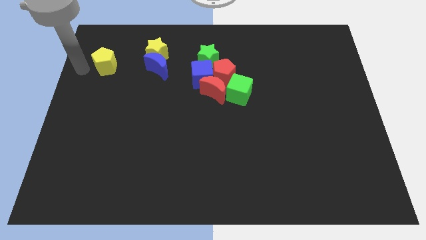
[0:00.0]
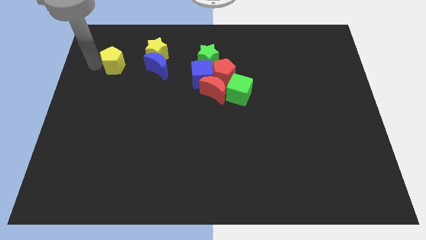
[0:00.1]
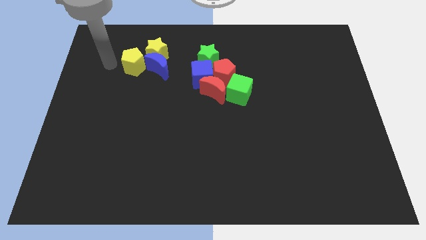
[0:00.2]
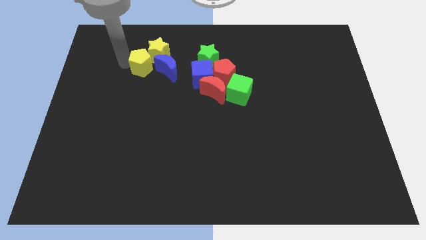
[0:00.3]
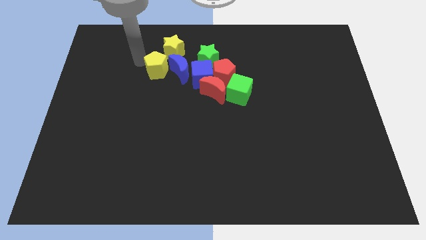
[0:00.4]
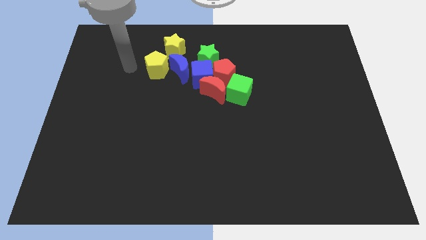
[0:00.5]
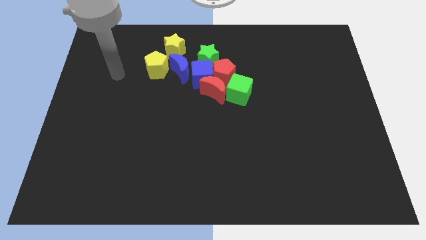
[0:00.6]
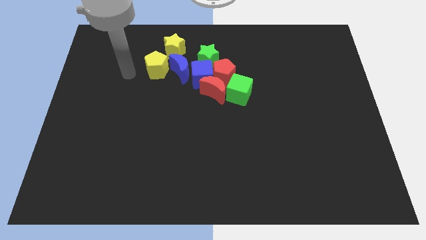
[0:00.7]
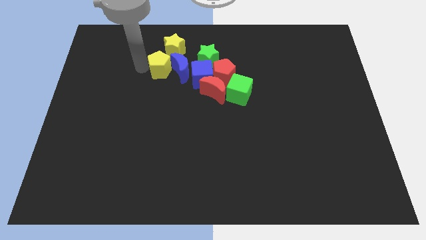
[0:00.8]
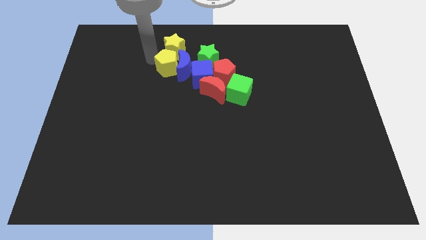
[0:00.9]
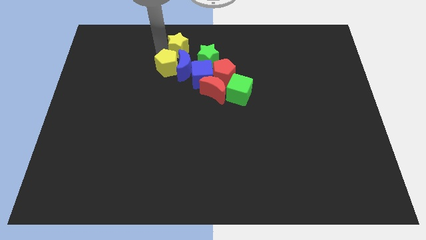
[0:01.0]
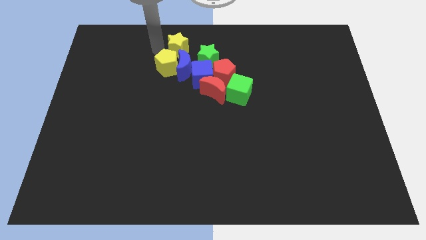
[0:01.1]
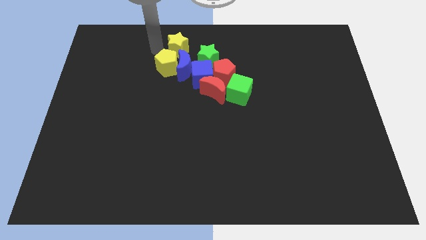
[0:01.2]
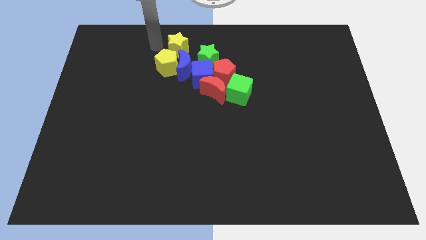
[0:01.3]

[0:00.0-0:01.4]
push the yellow pentagon into the blue crescent from the left

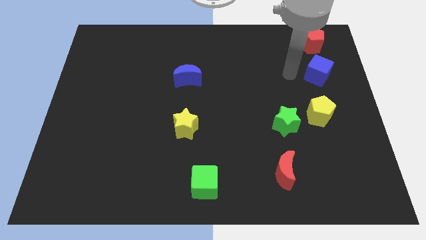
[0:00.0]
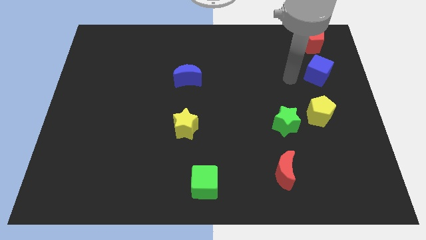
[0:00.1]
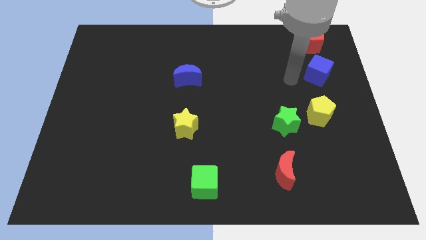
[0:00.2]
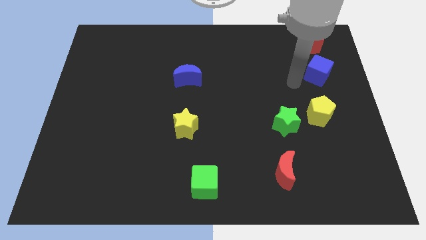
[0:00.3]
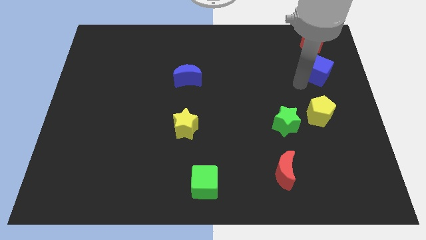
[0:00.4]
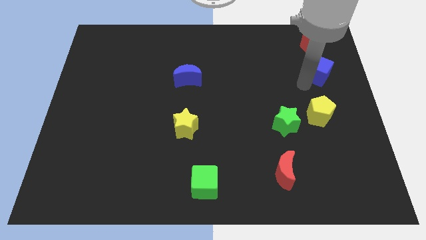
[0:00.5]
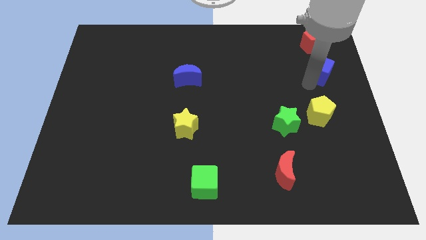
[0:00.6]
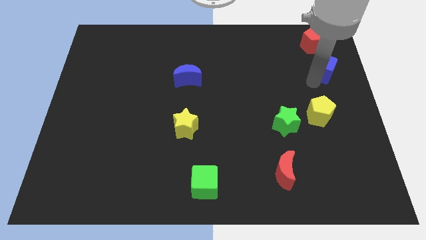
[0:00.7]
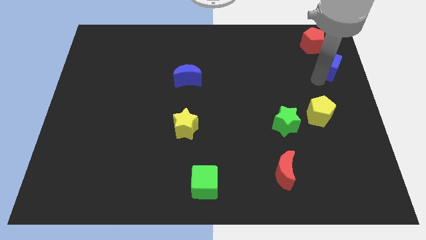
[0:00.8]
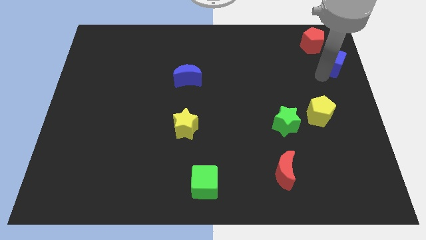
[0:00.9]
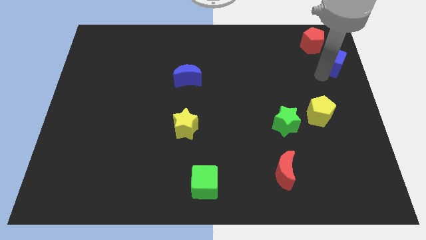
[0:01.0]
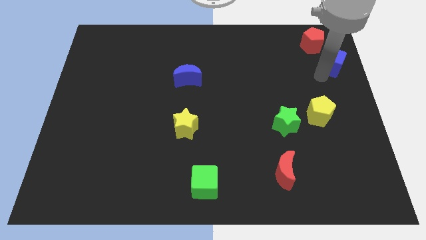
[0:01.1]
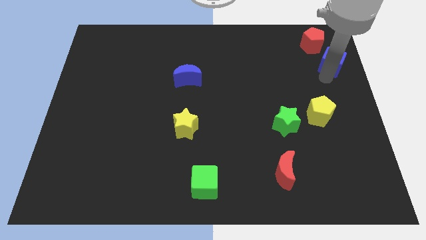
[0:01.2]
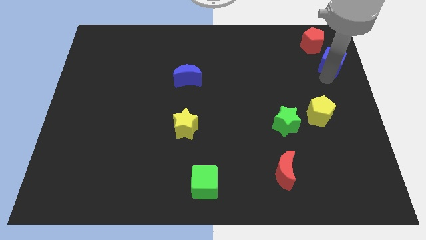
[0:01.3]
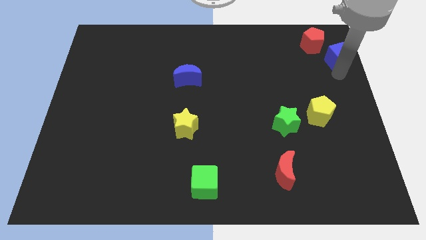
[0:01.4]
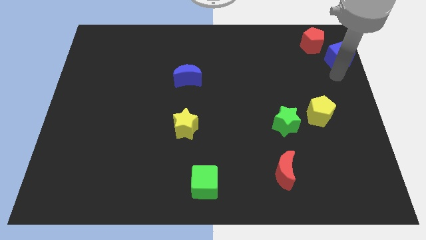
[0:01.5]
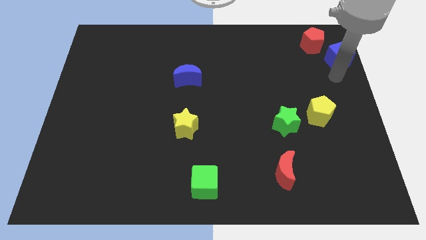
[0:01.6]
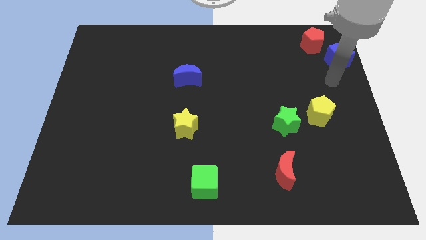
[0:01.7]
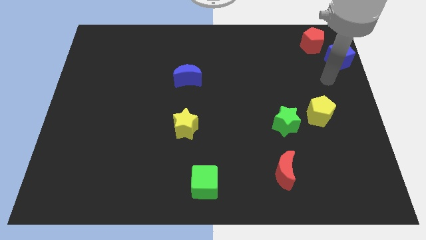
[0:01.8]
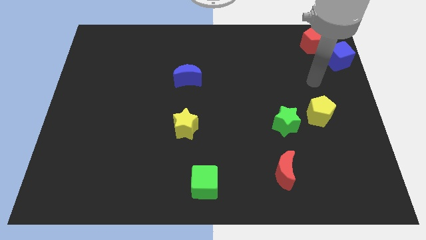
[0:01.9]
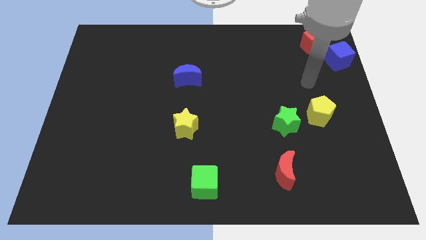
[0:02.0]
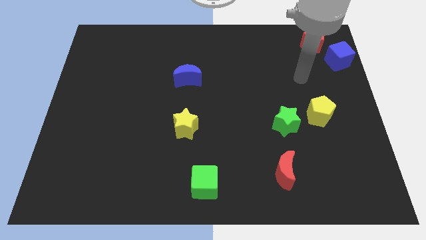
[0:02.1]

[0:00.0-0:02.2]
push blue cube to the right corner of board

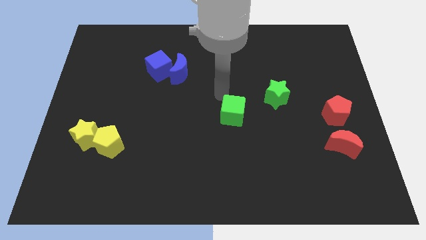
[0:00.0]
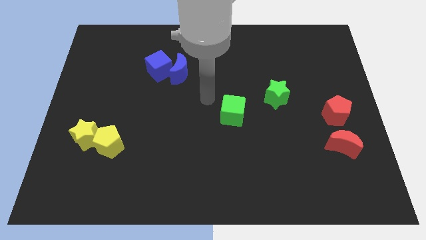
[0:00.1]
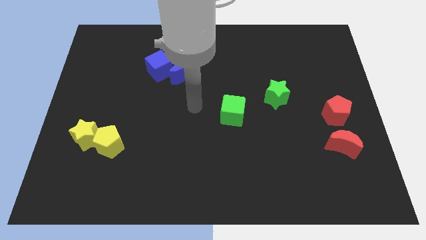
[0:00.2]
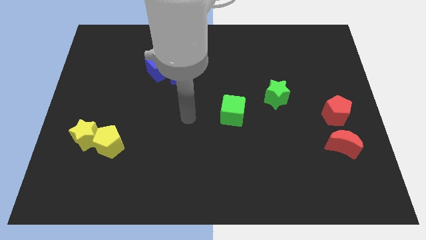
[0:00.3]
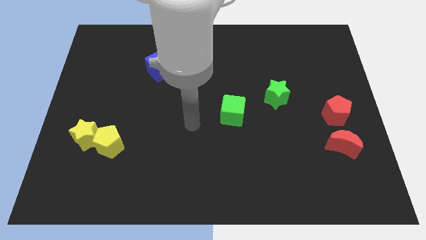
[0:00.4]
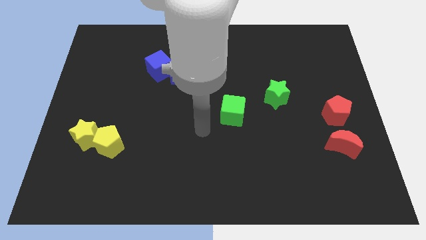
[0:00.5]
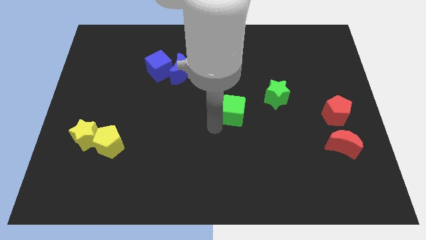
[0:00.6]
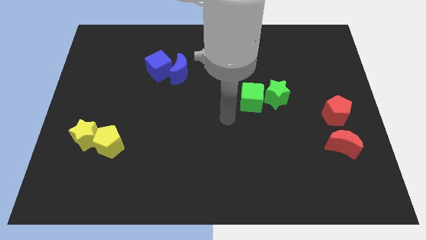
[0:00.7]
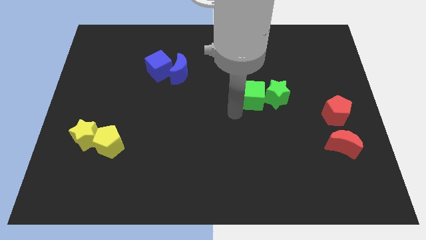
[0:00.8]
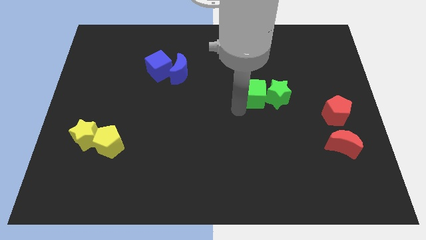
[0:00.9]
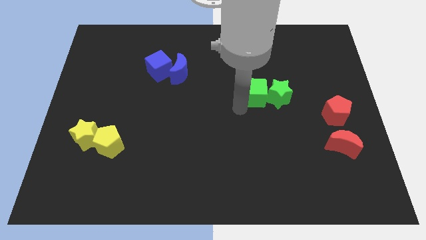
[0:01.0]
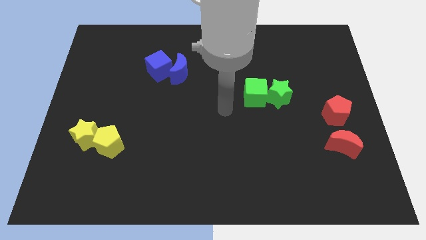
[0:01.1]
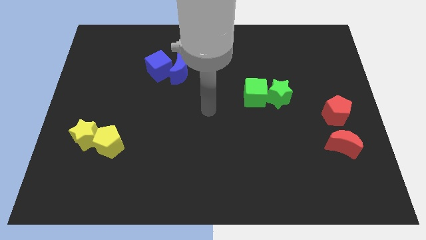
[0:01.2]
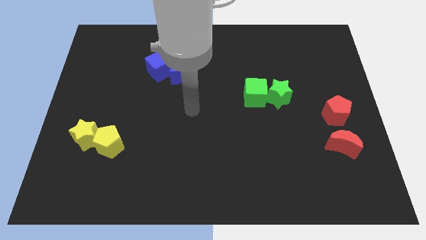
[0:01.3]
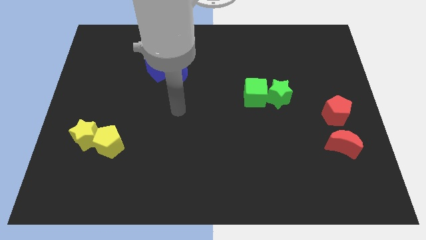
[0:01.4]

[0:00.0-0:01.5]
move the green cube into green star horizontally

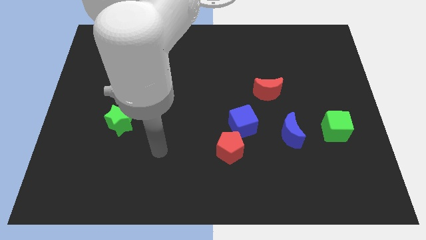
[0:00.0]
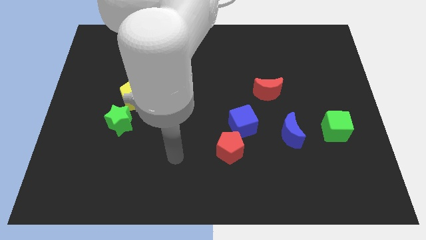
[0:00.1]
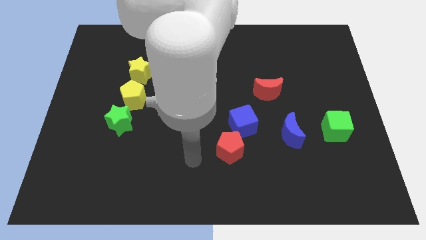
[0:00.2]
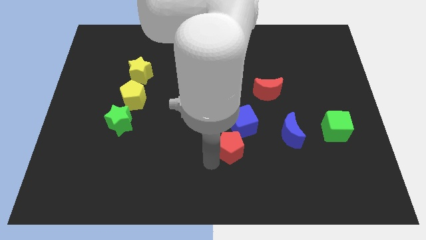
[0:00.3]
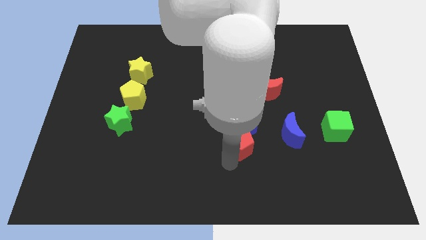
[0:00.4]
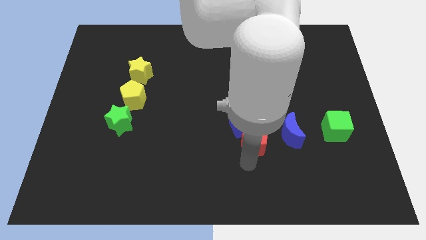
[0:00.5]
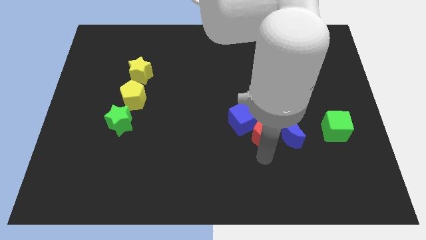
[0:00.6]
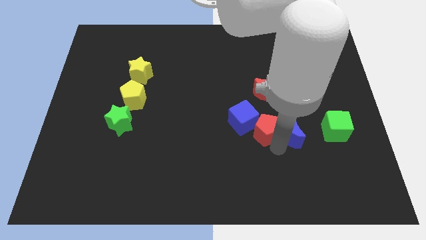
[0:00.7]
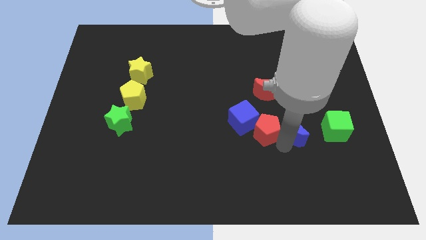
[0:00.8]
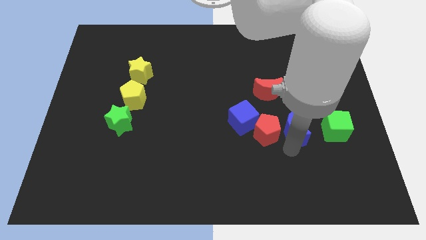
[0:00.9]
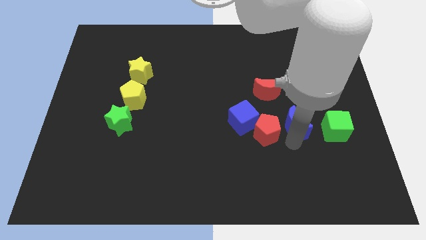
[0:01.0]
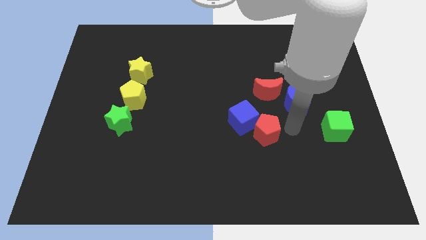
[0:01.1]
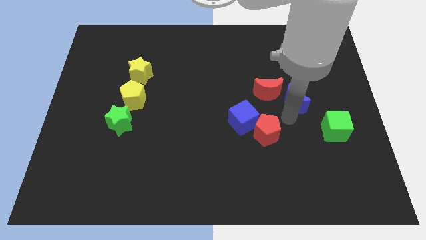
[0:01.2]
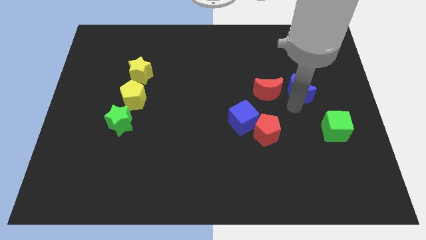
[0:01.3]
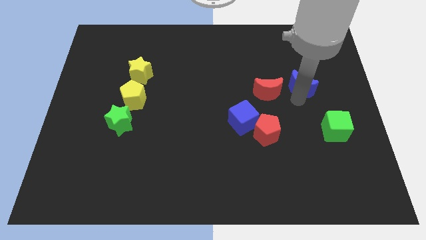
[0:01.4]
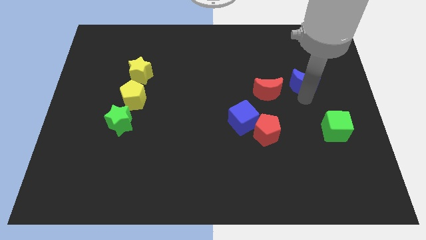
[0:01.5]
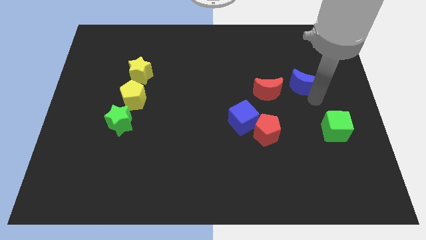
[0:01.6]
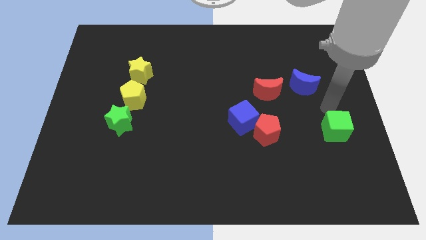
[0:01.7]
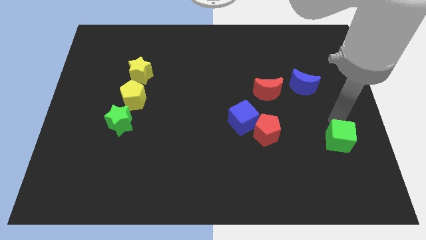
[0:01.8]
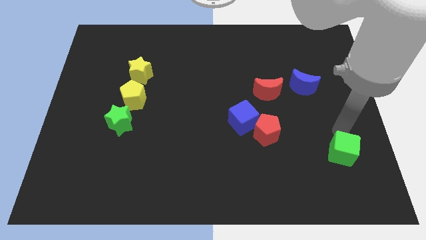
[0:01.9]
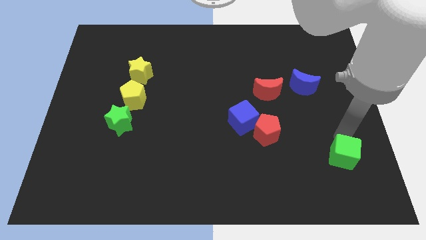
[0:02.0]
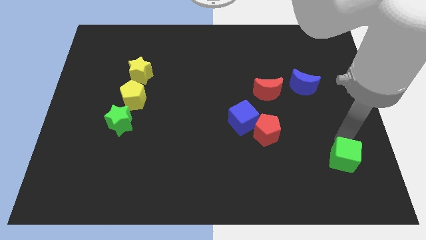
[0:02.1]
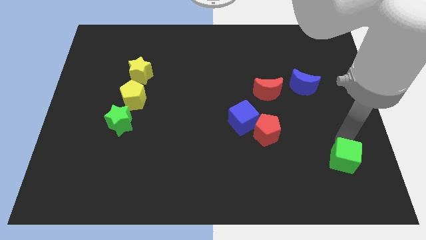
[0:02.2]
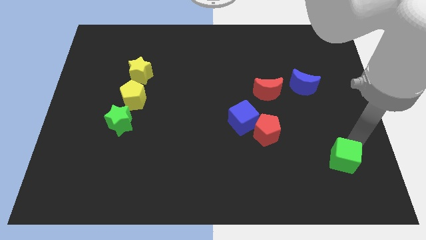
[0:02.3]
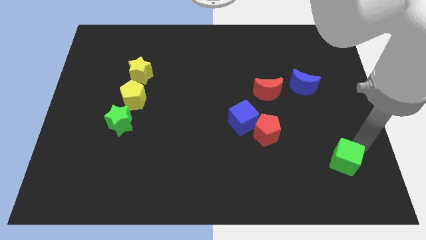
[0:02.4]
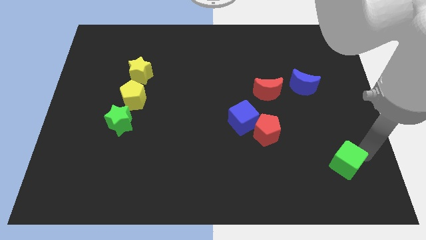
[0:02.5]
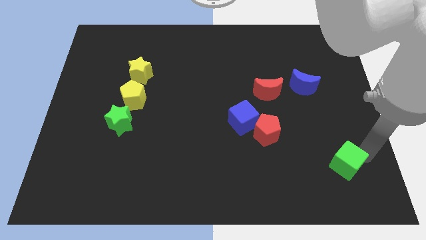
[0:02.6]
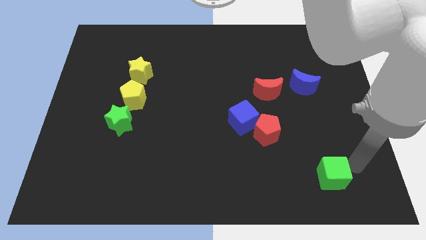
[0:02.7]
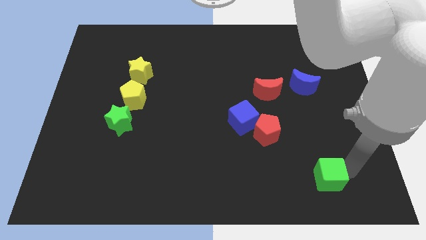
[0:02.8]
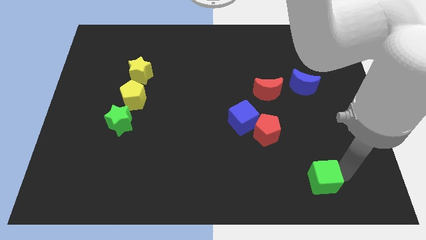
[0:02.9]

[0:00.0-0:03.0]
move the green cube diagonal to the red pentagon

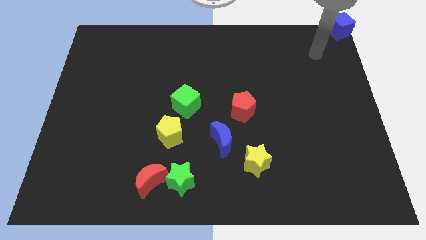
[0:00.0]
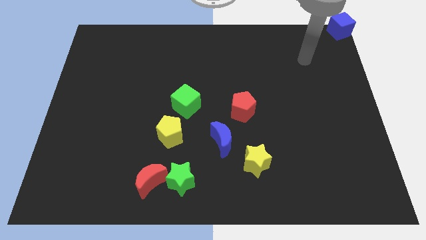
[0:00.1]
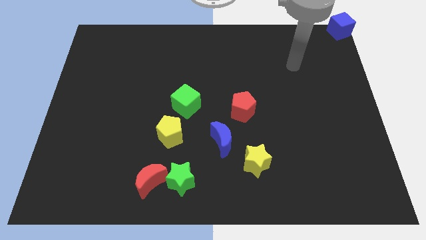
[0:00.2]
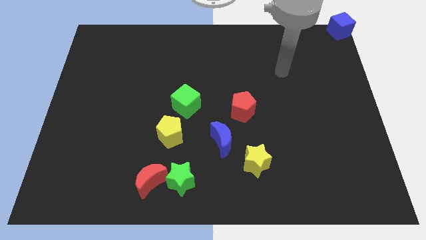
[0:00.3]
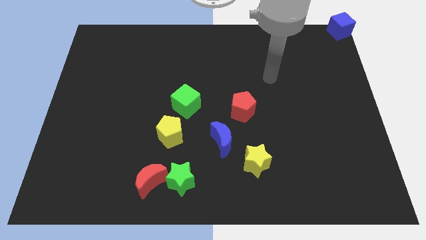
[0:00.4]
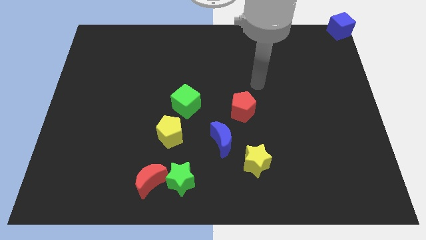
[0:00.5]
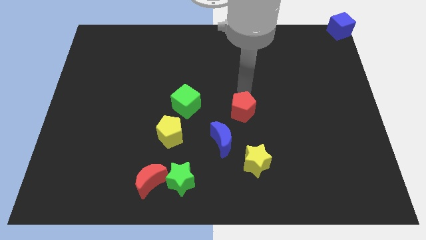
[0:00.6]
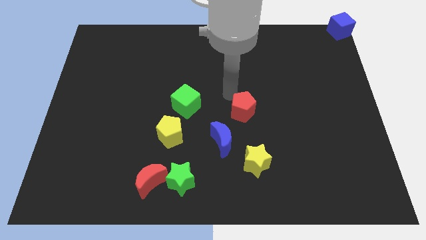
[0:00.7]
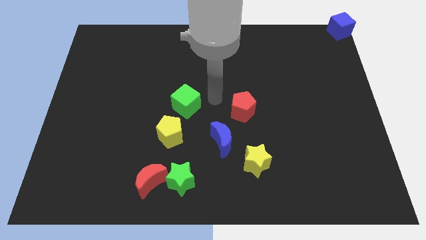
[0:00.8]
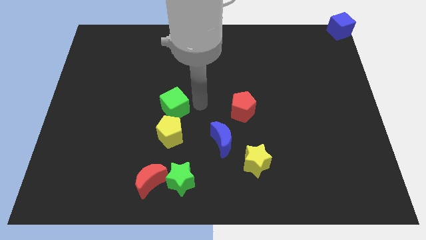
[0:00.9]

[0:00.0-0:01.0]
place the green cube on top of the yellow pentagon
